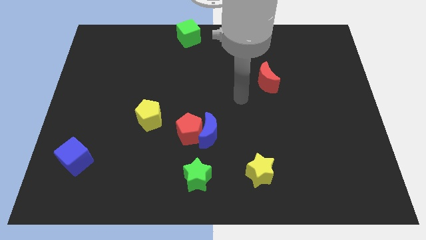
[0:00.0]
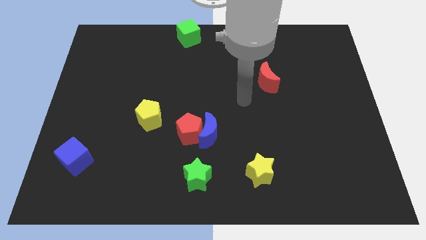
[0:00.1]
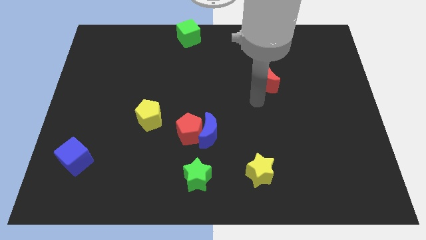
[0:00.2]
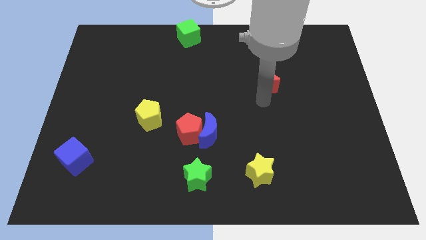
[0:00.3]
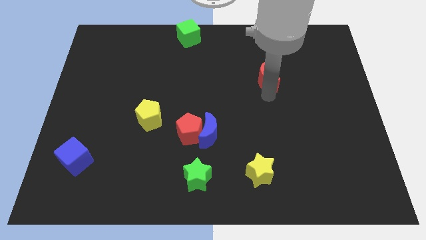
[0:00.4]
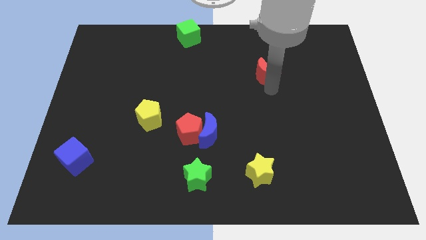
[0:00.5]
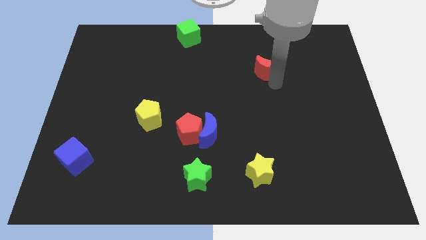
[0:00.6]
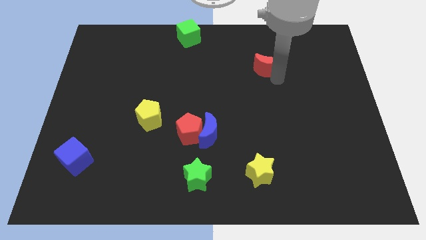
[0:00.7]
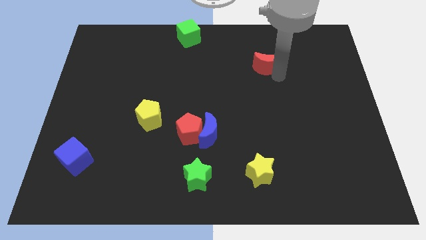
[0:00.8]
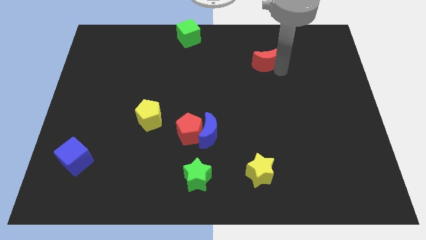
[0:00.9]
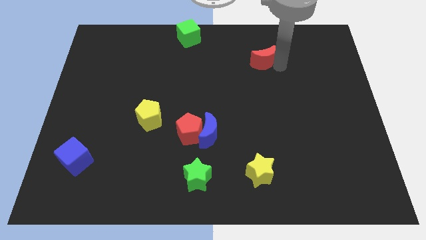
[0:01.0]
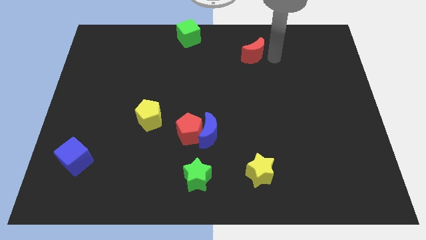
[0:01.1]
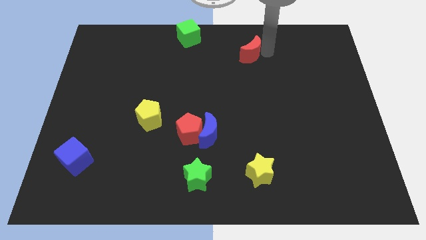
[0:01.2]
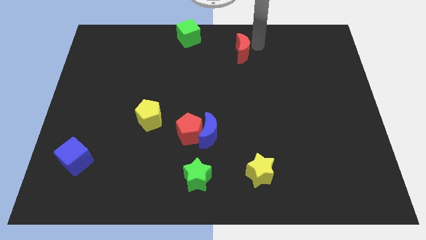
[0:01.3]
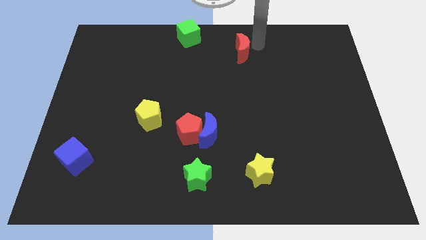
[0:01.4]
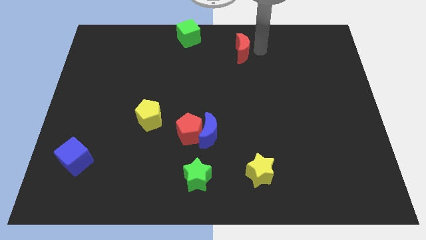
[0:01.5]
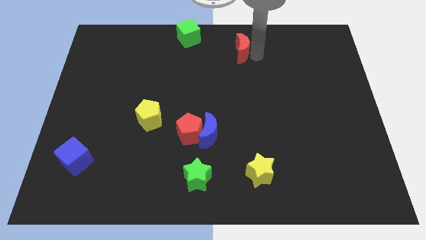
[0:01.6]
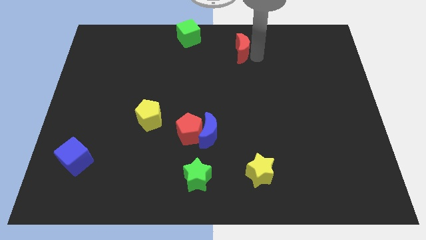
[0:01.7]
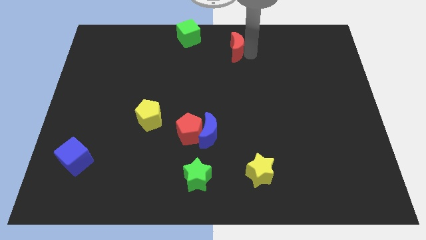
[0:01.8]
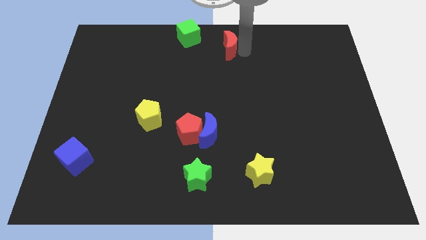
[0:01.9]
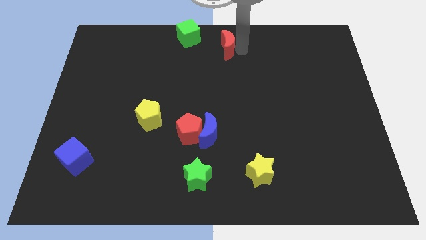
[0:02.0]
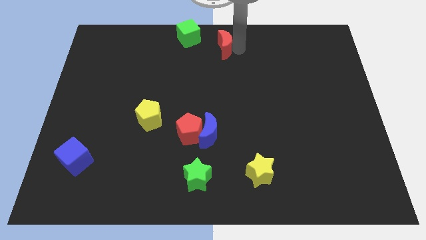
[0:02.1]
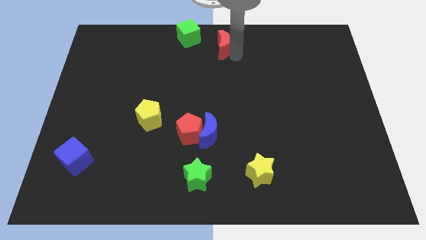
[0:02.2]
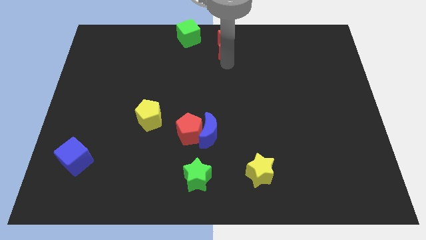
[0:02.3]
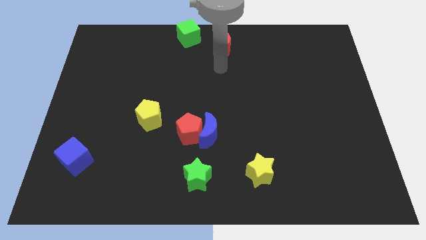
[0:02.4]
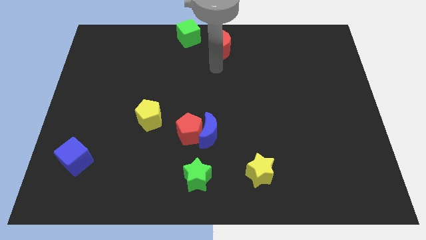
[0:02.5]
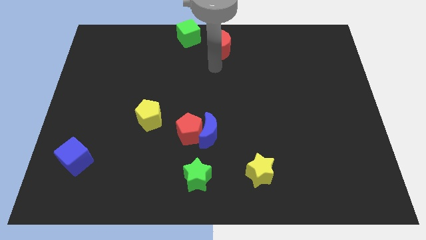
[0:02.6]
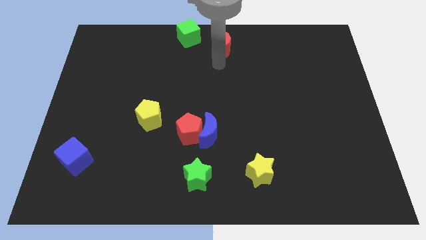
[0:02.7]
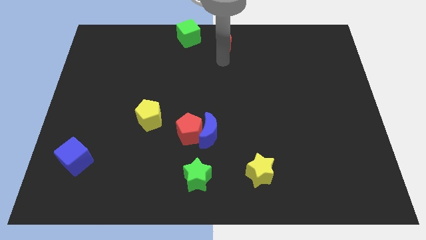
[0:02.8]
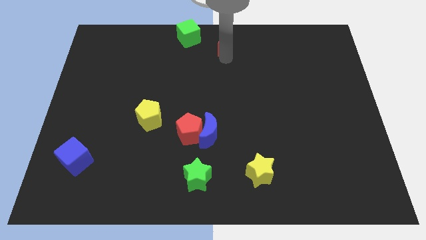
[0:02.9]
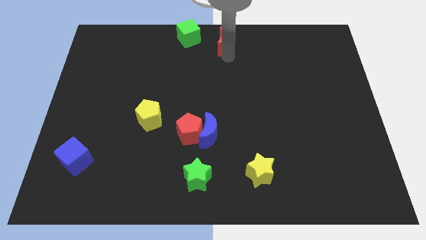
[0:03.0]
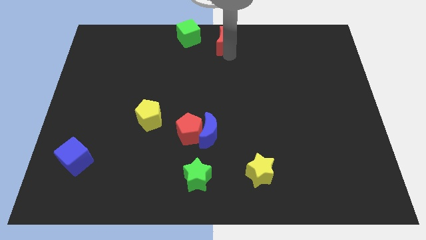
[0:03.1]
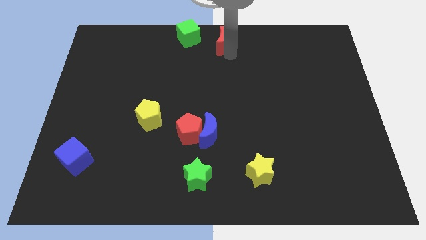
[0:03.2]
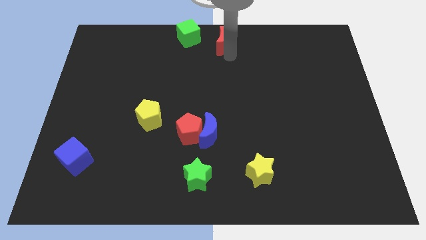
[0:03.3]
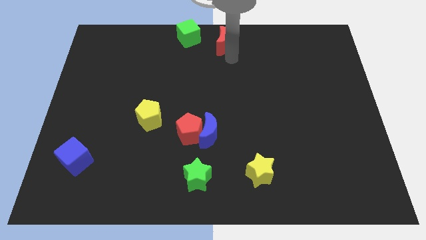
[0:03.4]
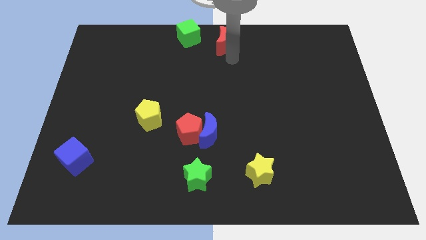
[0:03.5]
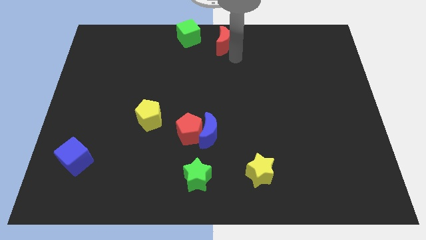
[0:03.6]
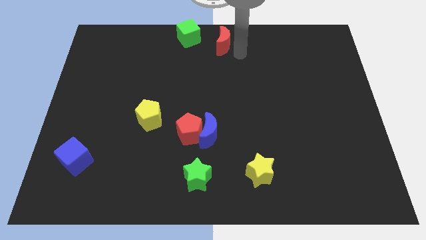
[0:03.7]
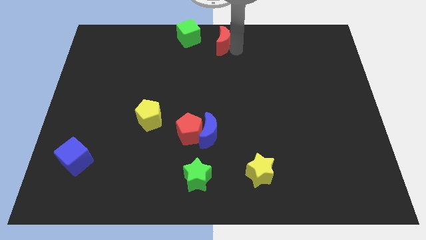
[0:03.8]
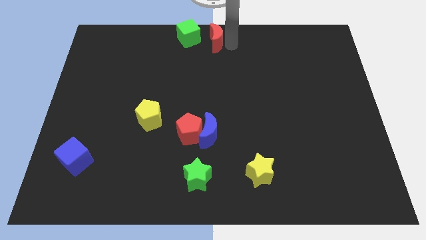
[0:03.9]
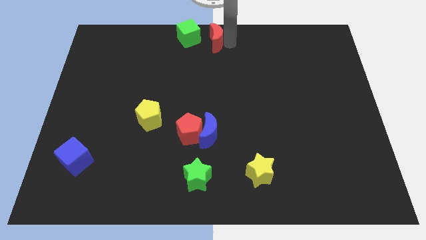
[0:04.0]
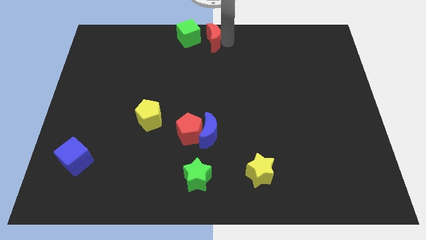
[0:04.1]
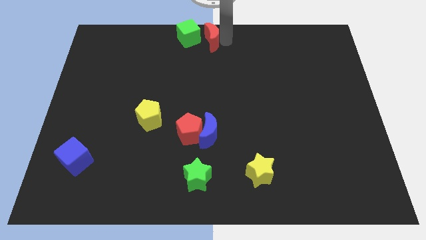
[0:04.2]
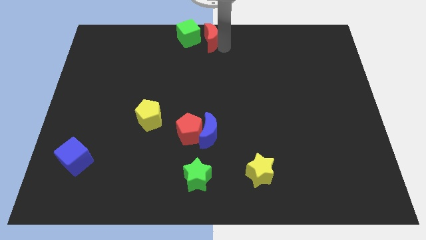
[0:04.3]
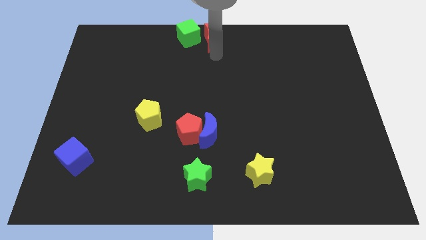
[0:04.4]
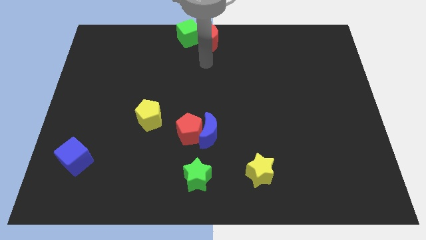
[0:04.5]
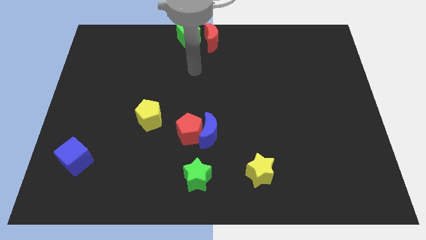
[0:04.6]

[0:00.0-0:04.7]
push the red crescent towards the top center of the board

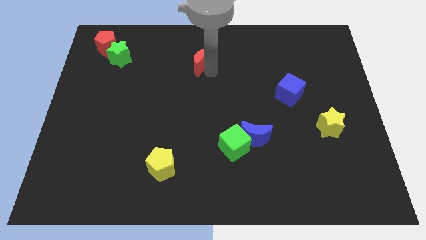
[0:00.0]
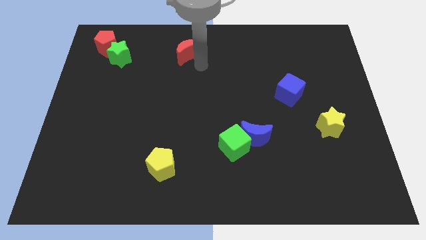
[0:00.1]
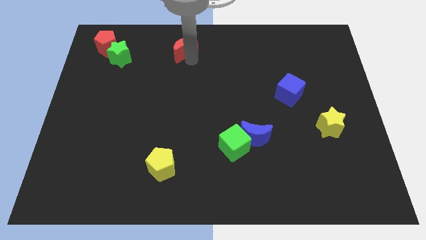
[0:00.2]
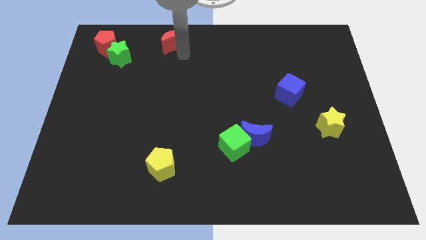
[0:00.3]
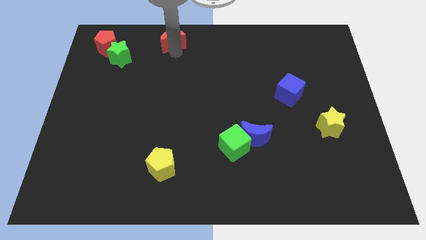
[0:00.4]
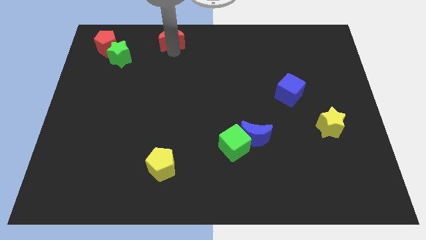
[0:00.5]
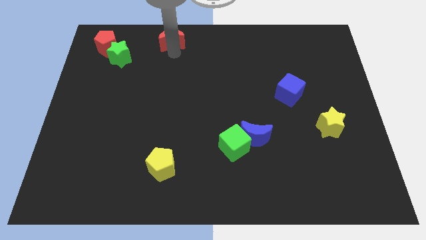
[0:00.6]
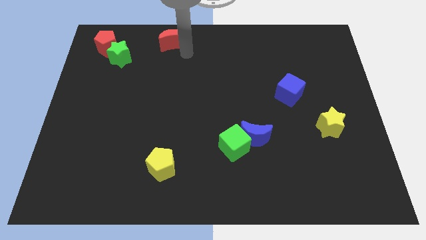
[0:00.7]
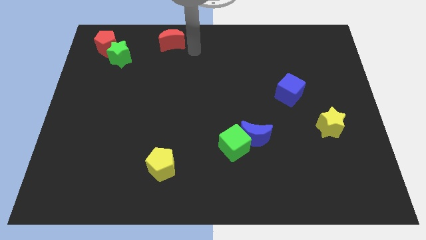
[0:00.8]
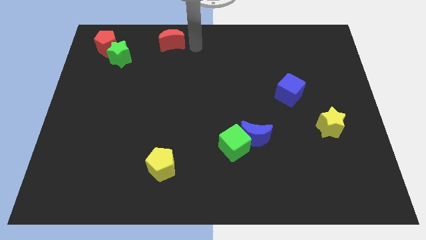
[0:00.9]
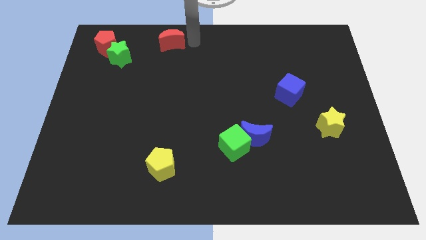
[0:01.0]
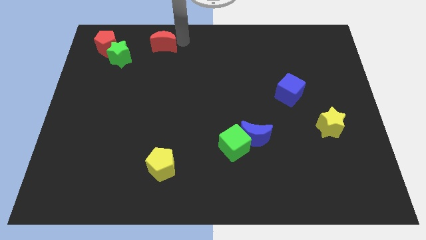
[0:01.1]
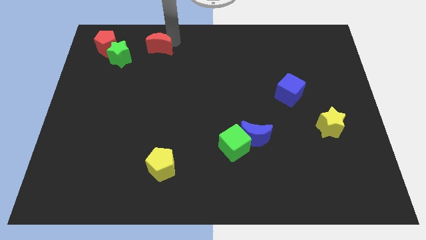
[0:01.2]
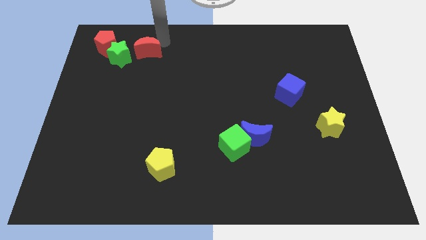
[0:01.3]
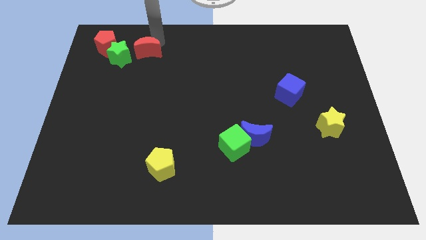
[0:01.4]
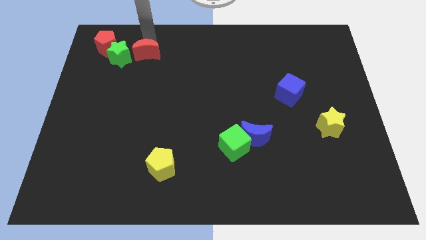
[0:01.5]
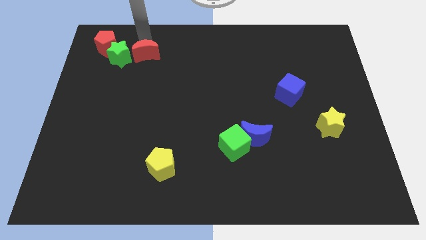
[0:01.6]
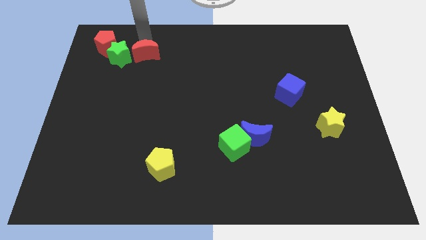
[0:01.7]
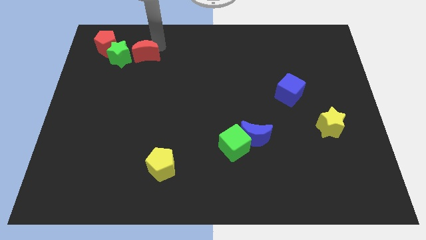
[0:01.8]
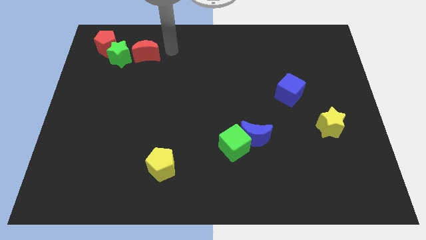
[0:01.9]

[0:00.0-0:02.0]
place the red crescent to the right of the green star

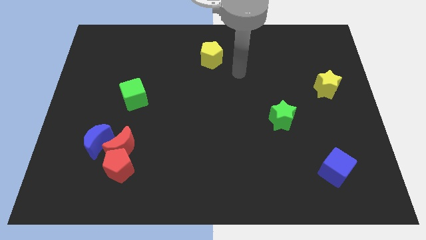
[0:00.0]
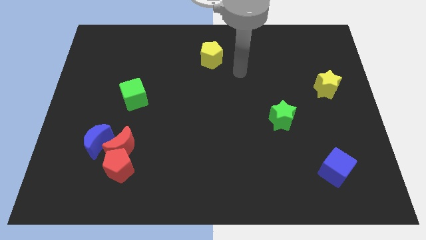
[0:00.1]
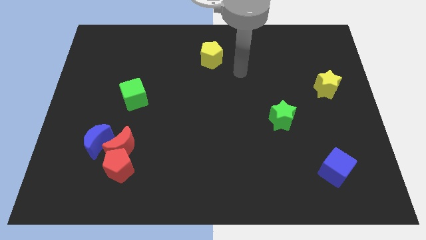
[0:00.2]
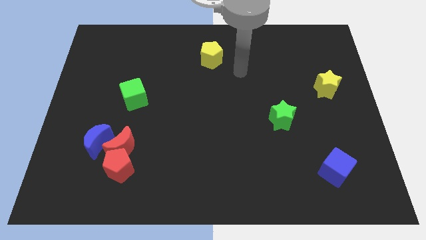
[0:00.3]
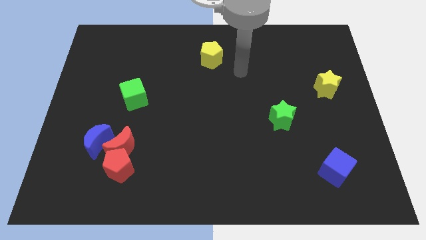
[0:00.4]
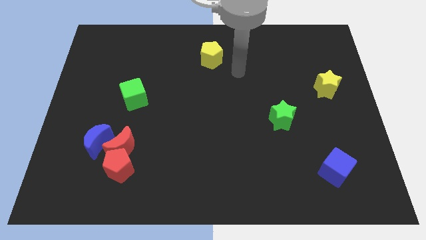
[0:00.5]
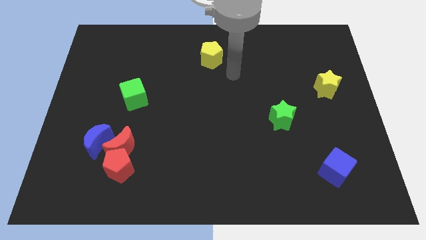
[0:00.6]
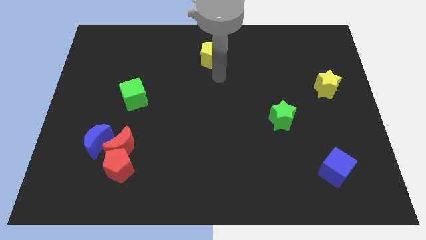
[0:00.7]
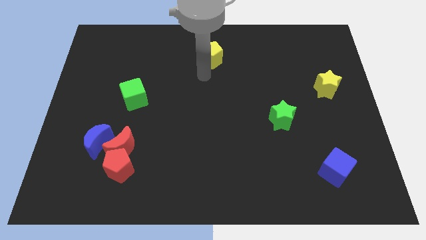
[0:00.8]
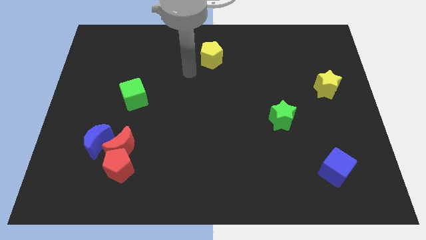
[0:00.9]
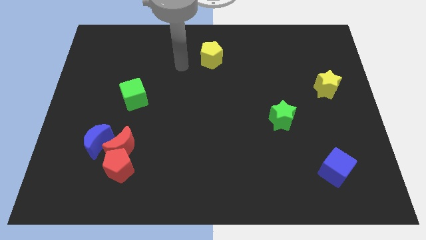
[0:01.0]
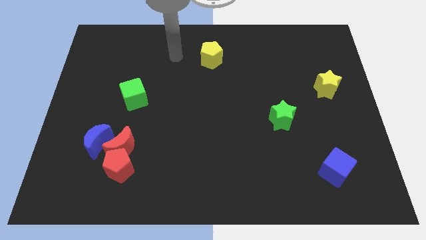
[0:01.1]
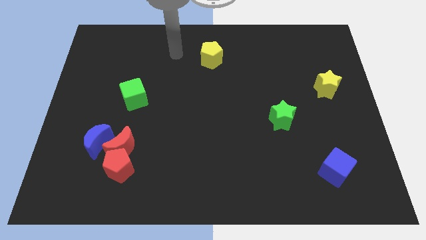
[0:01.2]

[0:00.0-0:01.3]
move your hand at the left side of the yellow pentagon

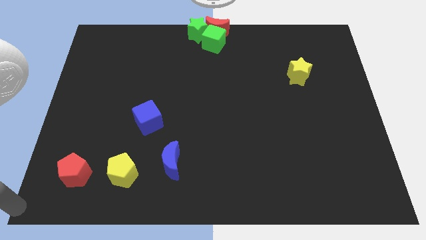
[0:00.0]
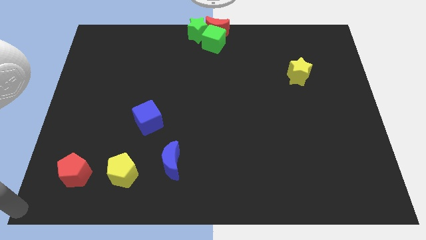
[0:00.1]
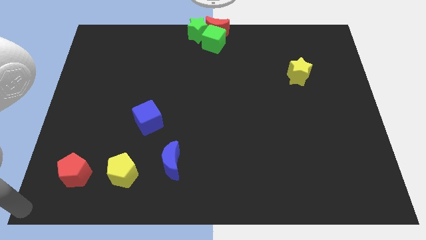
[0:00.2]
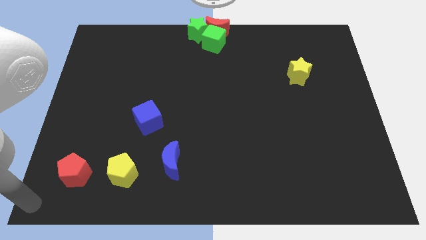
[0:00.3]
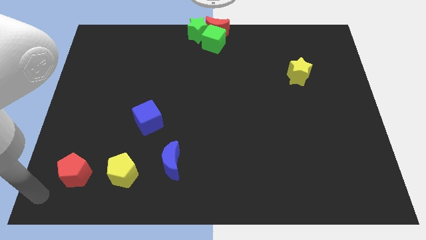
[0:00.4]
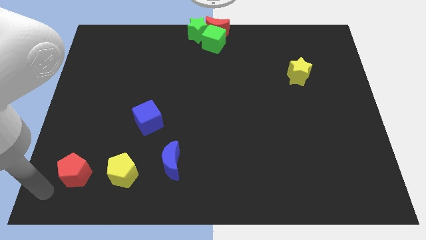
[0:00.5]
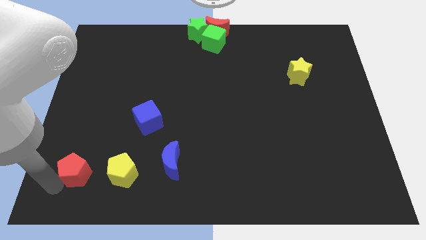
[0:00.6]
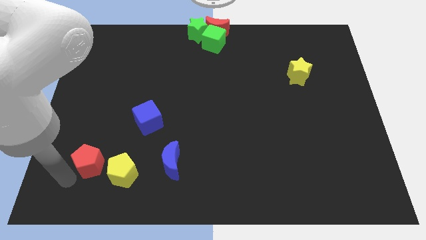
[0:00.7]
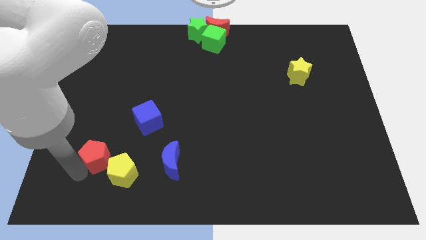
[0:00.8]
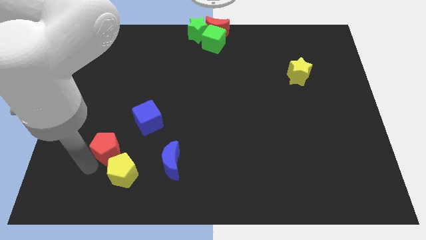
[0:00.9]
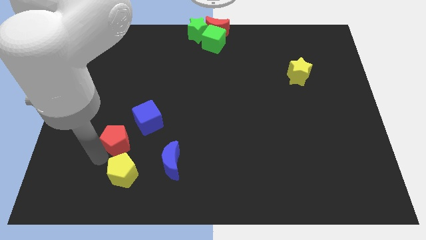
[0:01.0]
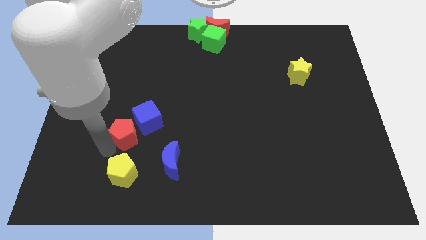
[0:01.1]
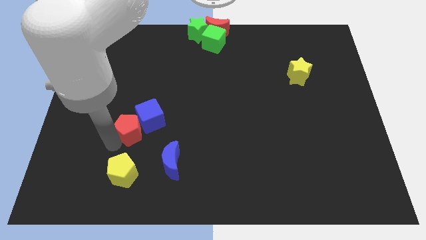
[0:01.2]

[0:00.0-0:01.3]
move the red pentagon close to the blue cube
